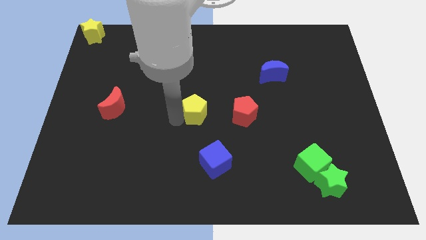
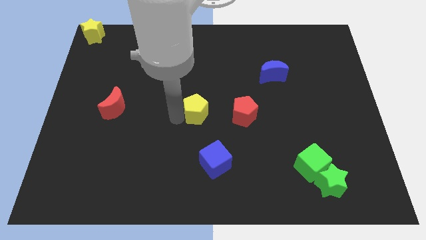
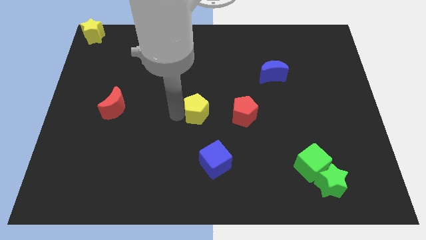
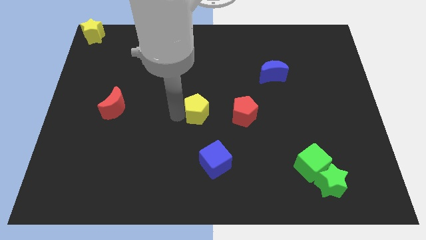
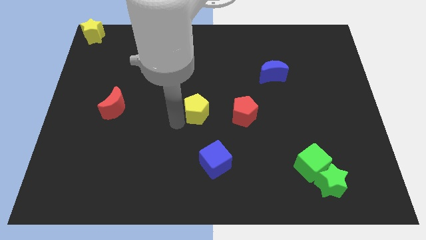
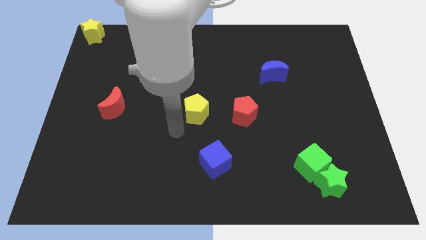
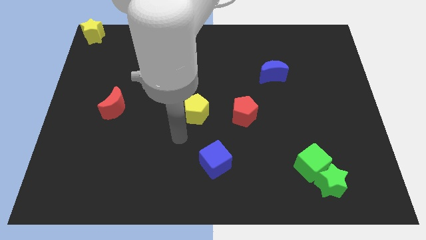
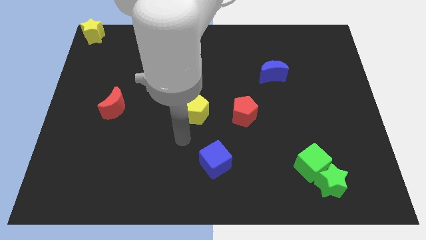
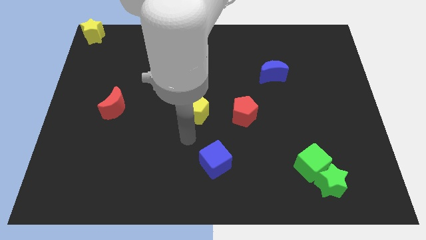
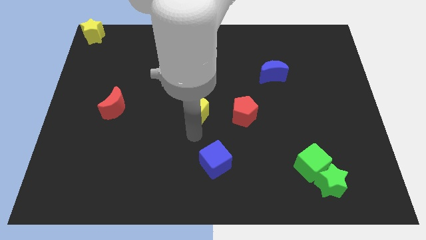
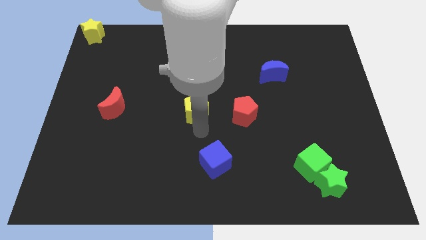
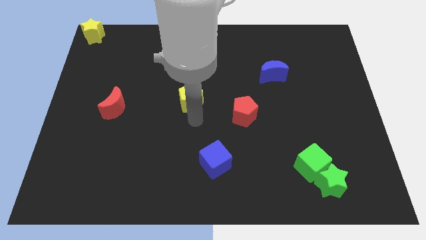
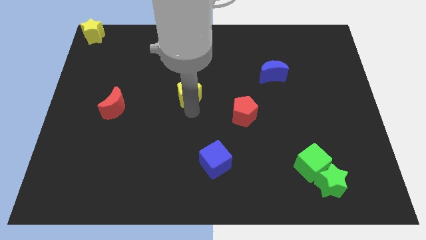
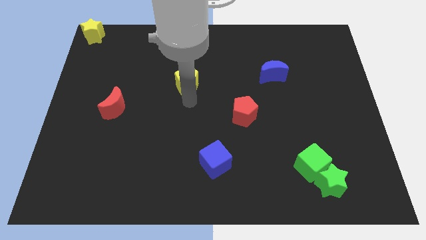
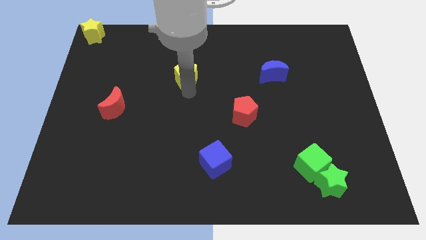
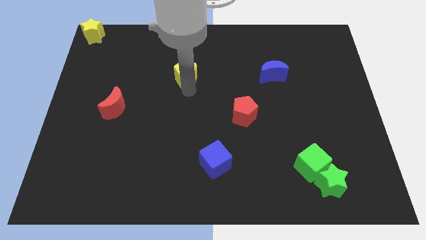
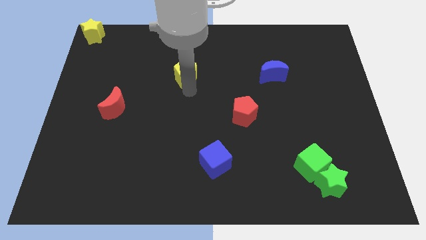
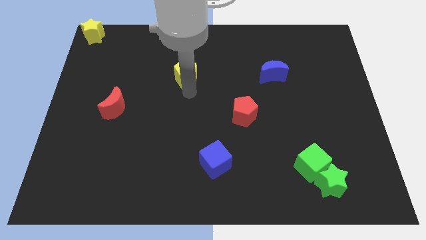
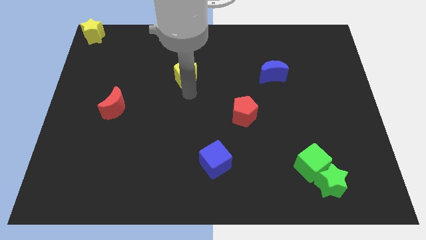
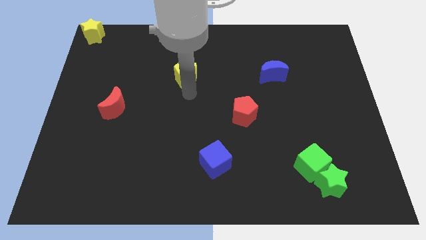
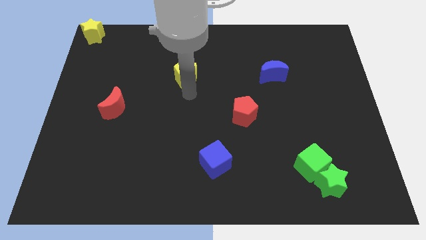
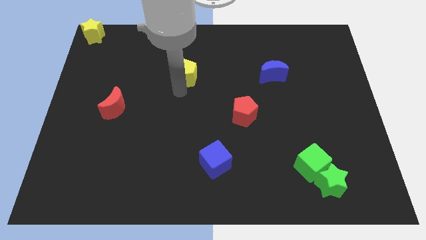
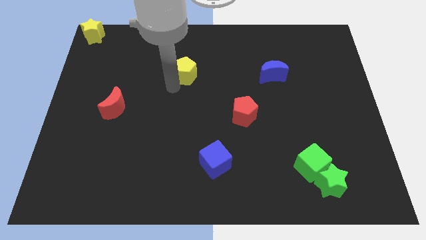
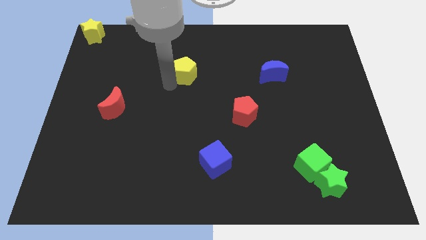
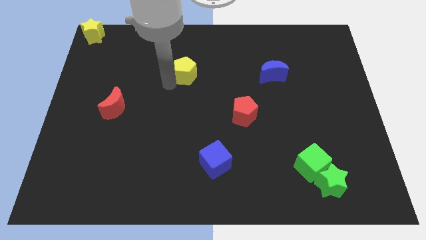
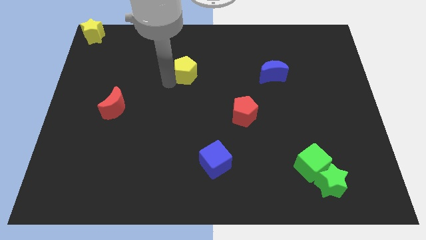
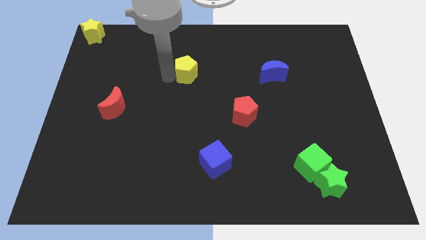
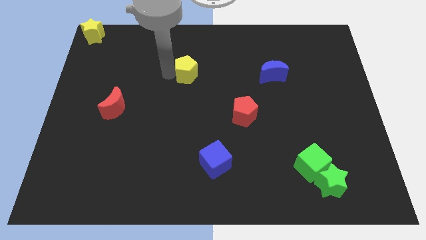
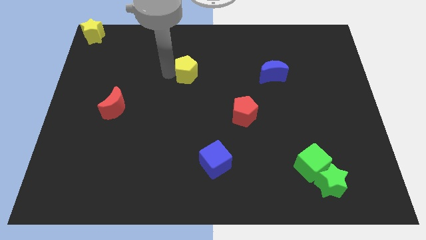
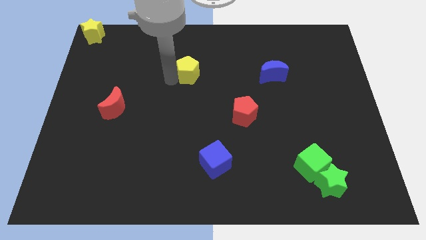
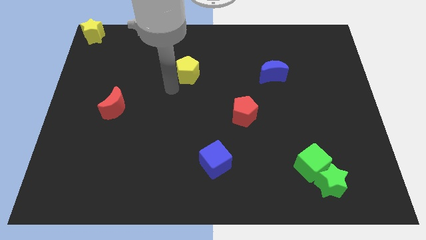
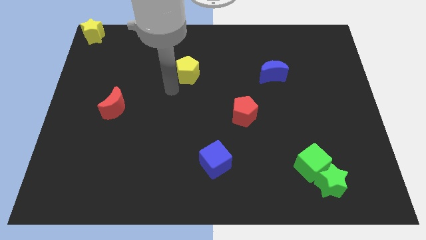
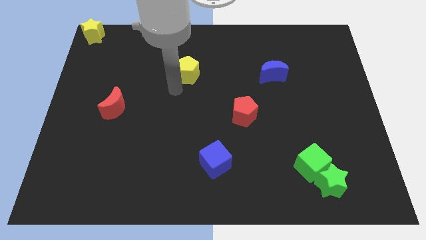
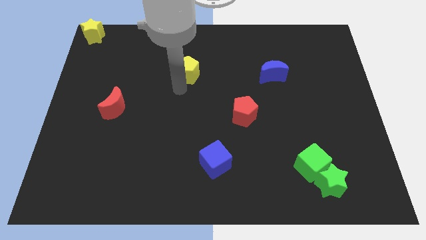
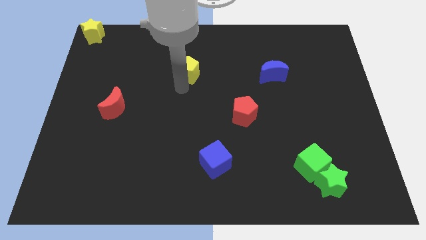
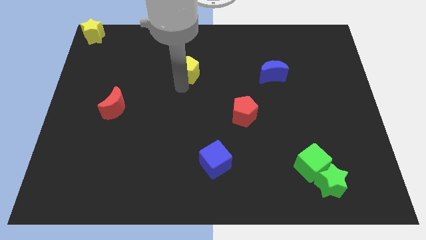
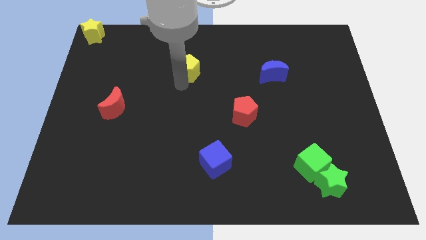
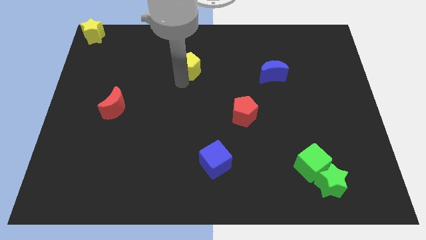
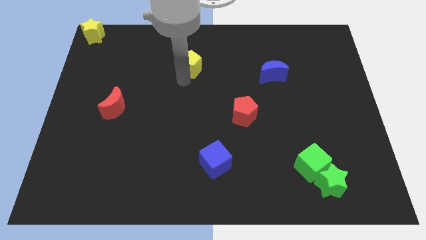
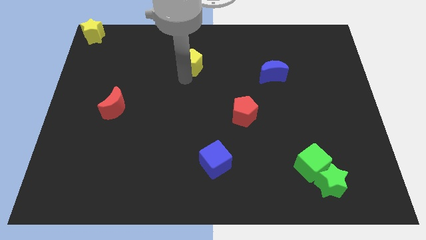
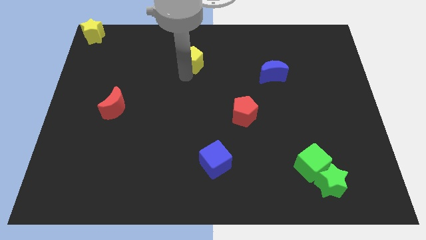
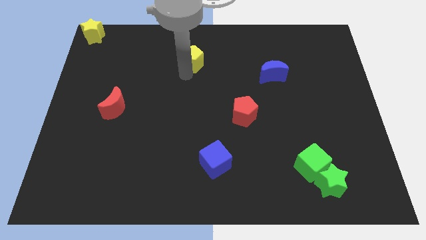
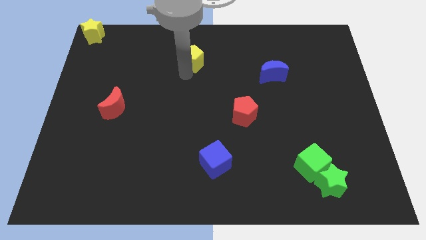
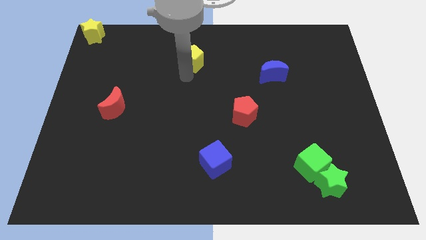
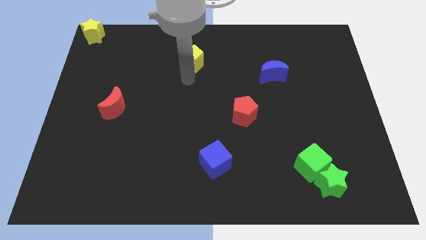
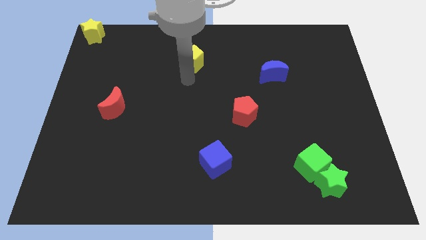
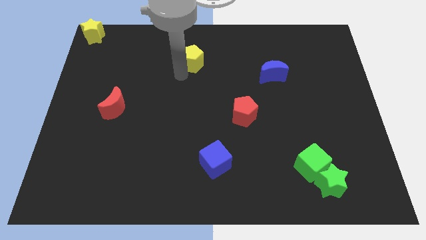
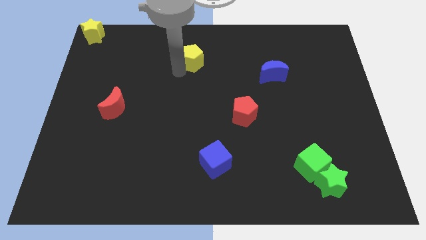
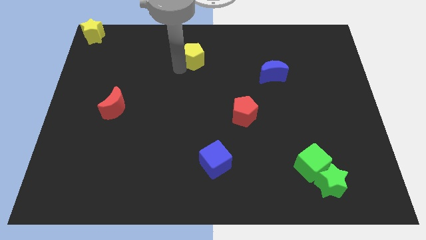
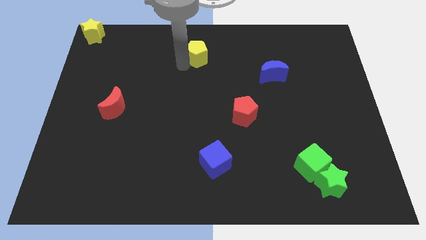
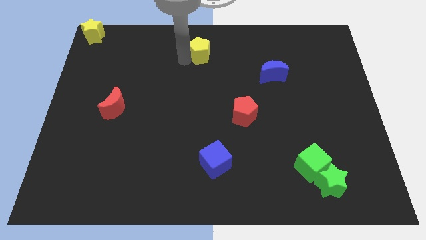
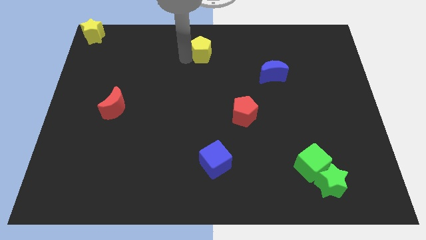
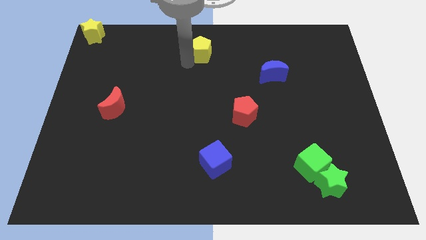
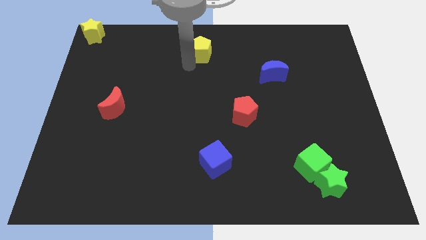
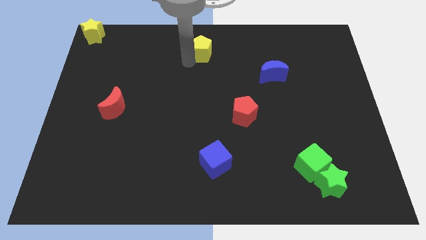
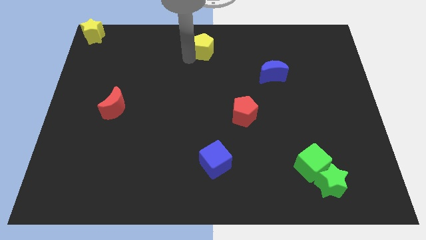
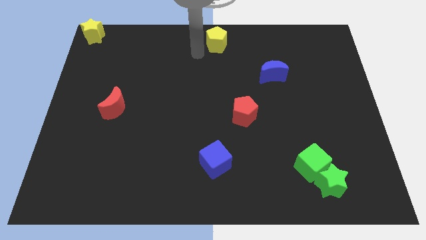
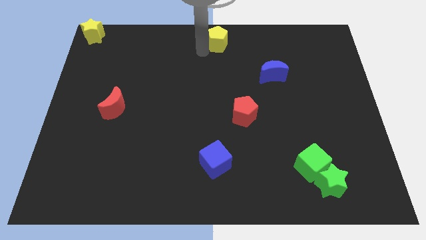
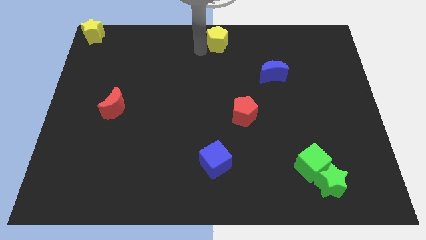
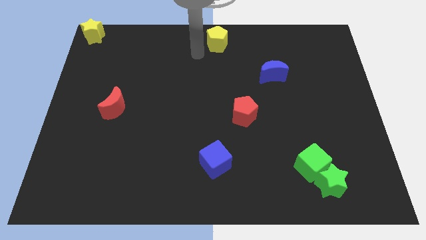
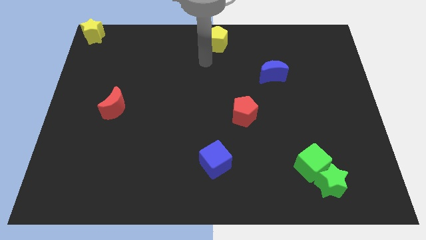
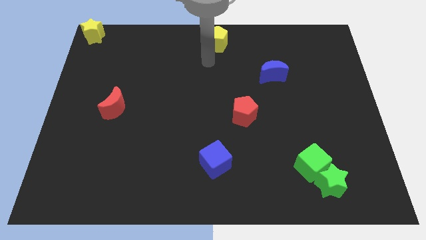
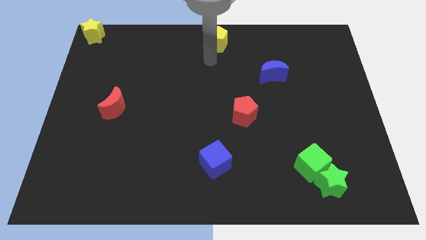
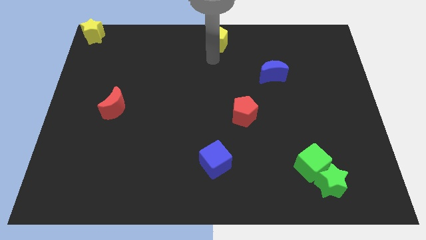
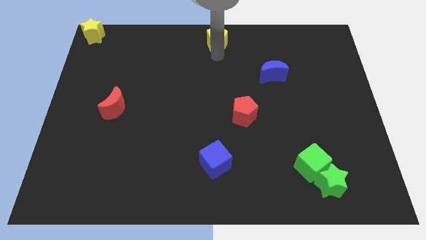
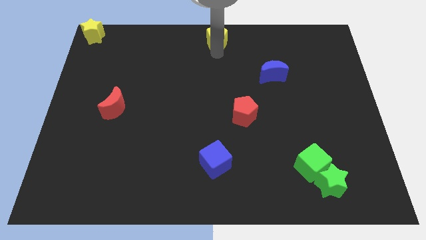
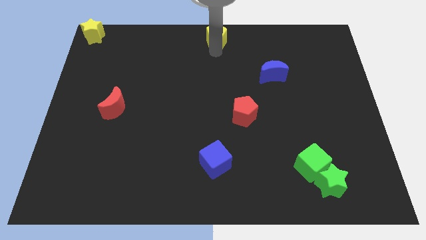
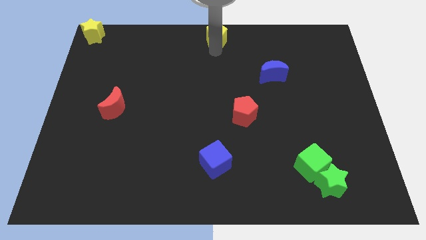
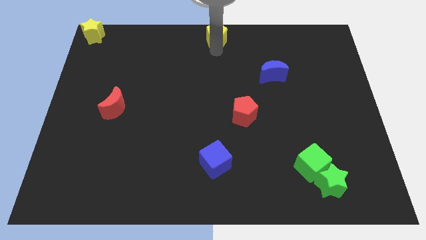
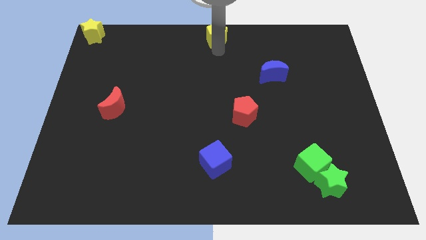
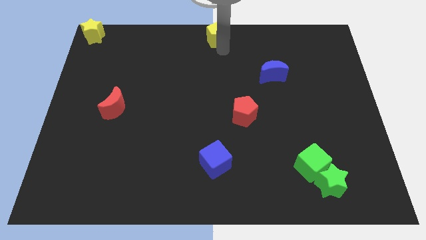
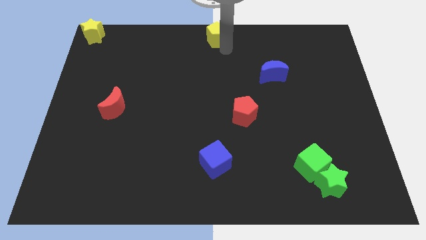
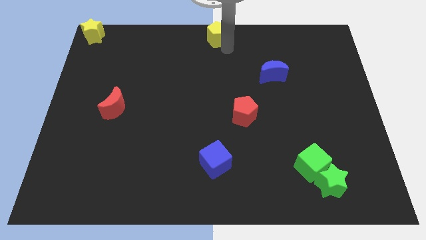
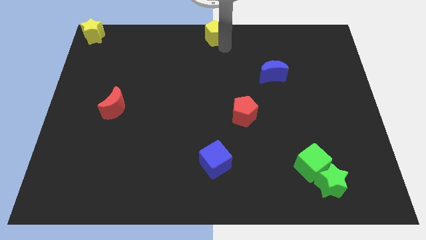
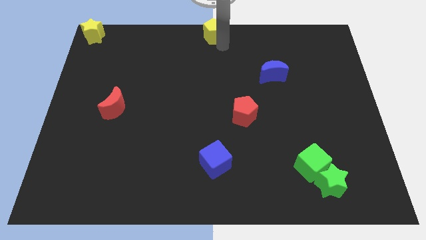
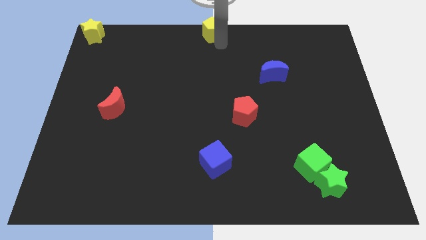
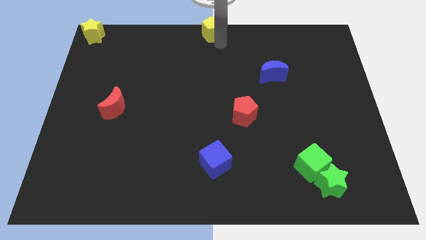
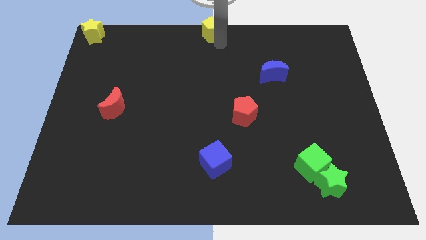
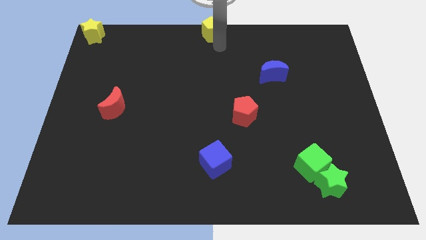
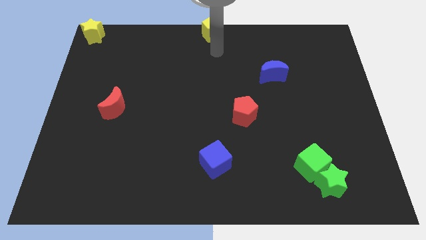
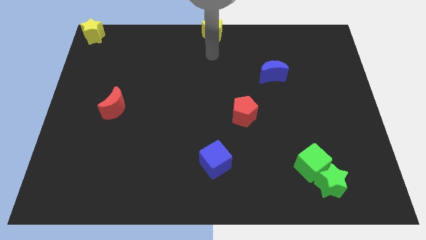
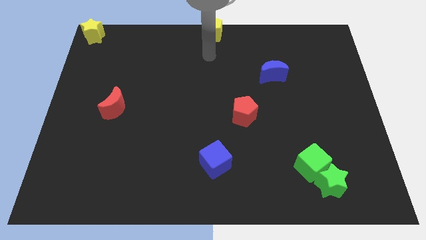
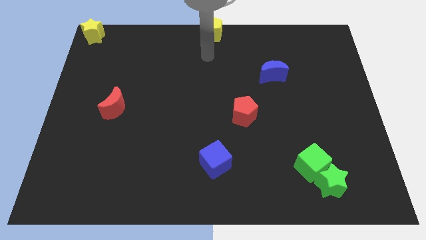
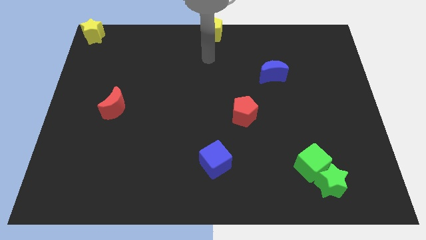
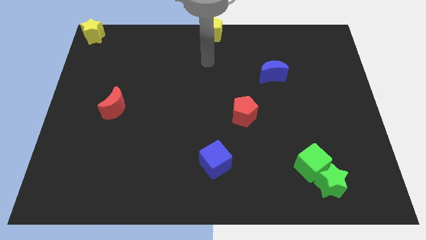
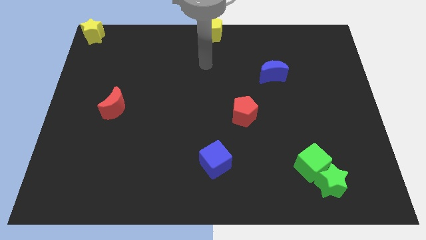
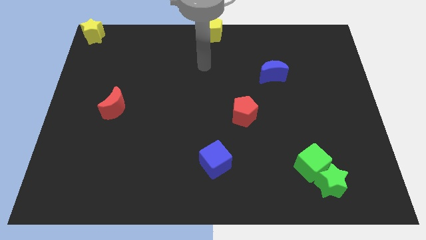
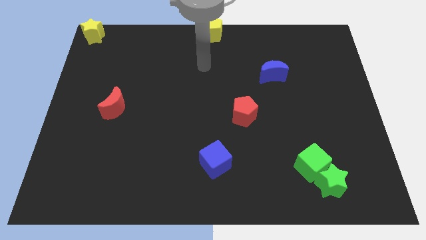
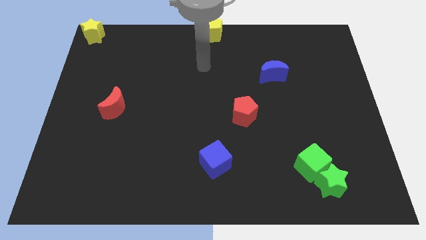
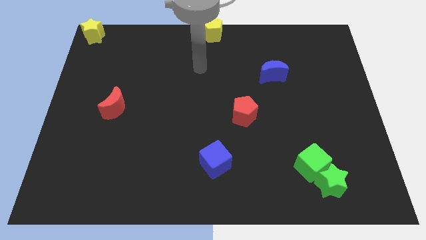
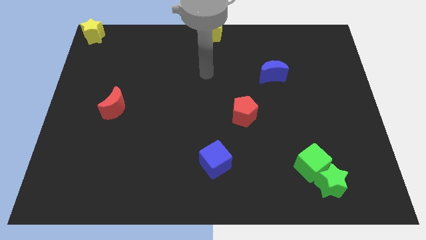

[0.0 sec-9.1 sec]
drag the yellow pentagon to the top center
